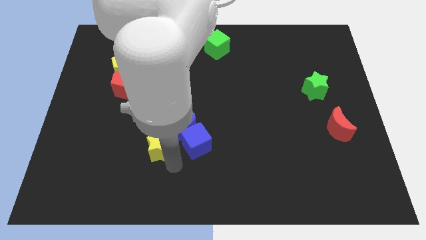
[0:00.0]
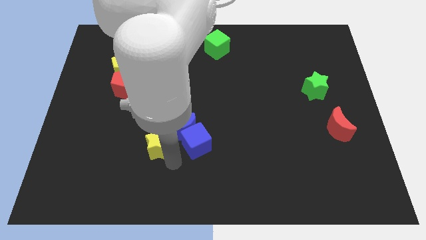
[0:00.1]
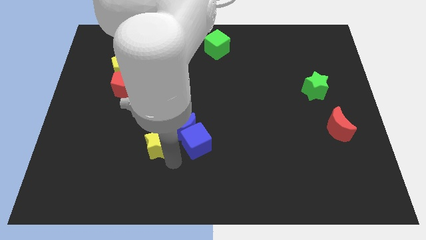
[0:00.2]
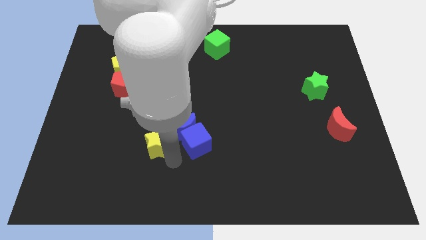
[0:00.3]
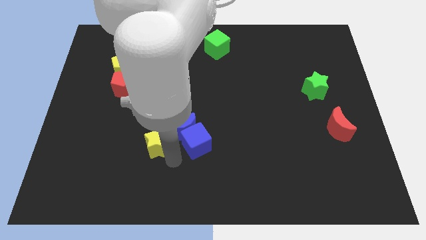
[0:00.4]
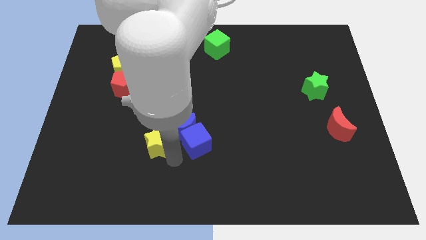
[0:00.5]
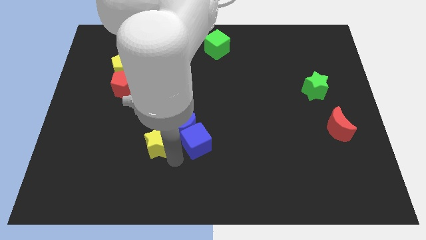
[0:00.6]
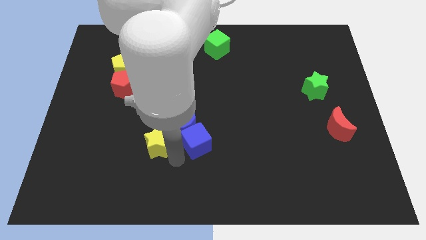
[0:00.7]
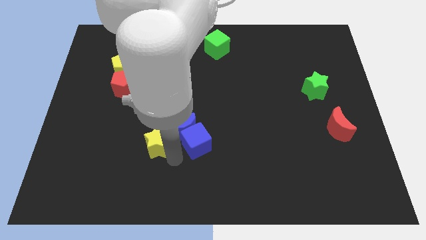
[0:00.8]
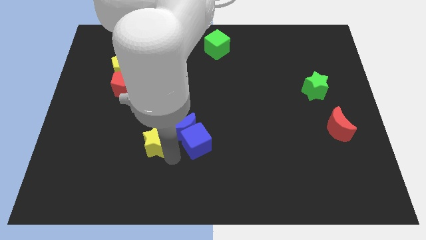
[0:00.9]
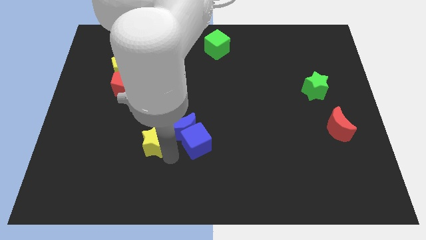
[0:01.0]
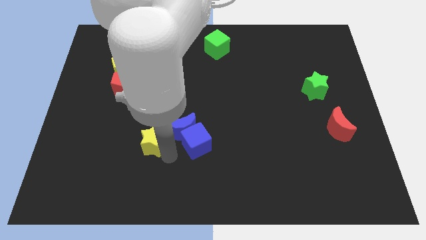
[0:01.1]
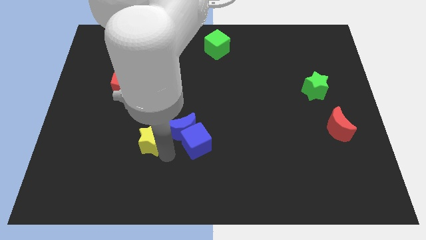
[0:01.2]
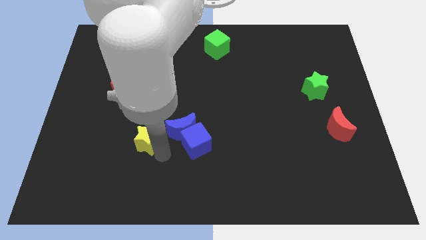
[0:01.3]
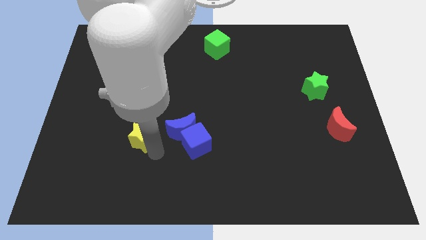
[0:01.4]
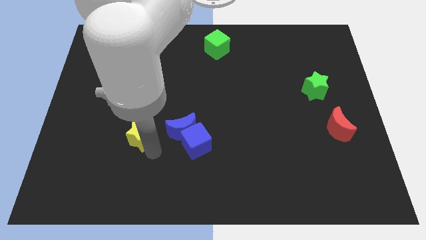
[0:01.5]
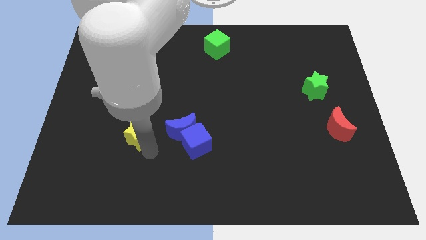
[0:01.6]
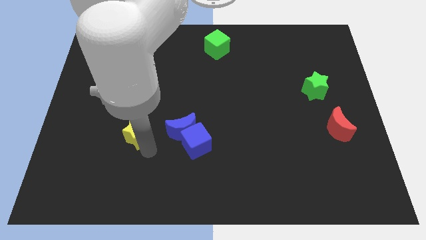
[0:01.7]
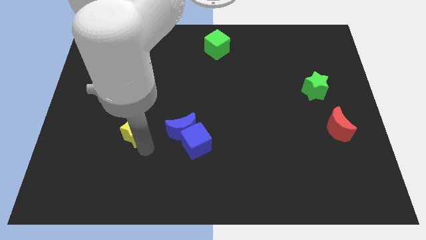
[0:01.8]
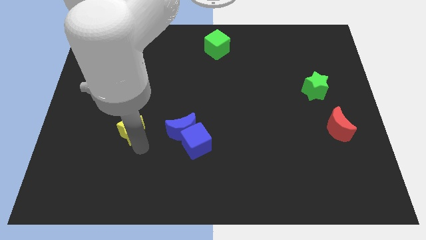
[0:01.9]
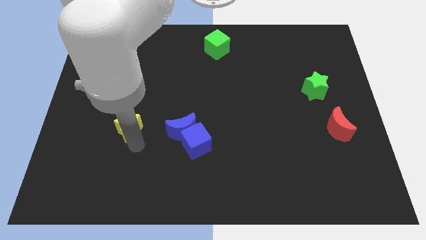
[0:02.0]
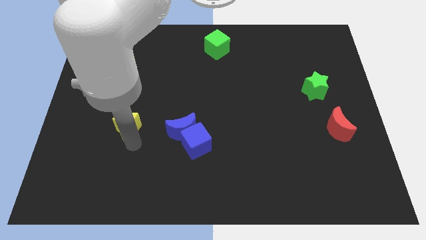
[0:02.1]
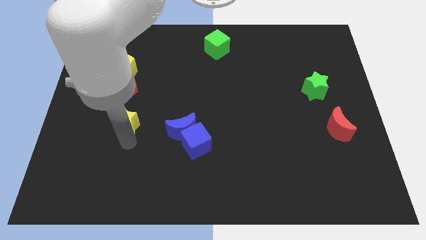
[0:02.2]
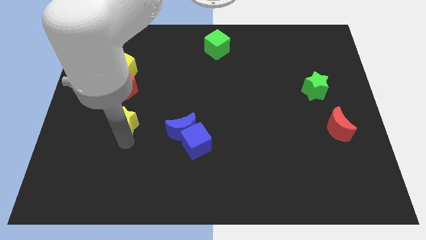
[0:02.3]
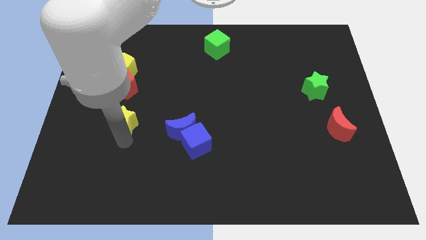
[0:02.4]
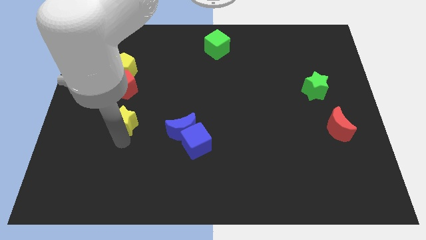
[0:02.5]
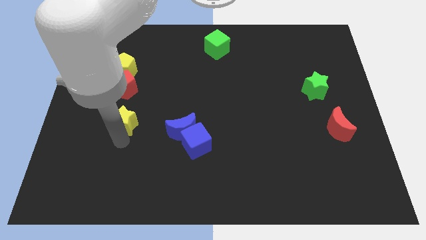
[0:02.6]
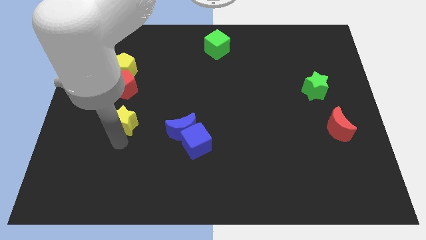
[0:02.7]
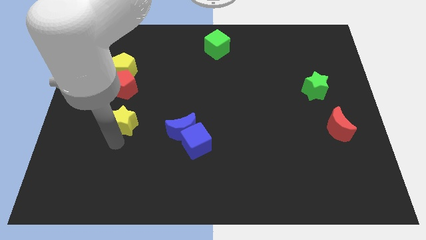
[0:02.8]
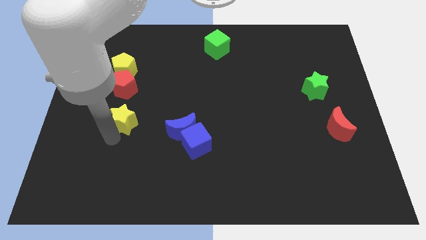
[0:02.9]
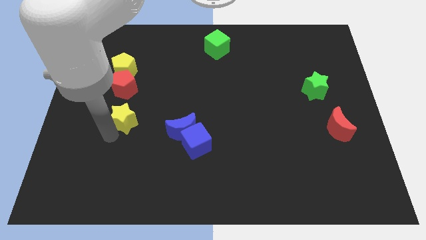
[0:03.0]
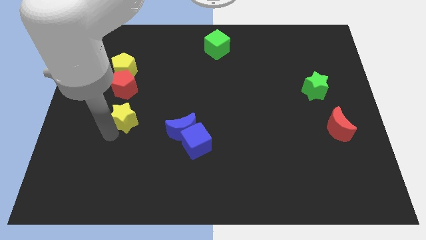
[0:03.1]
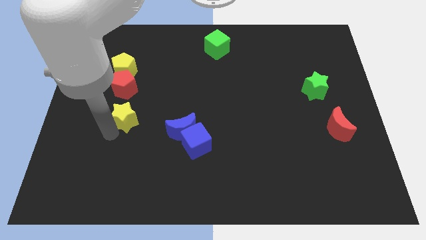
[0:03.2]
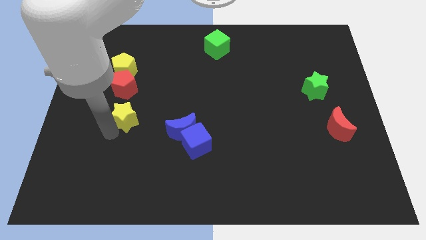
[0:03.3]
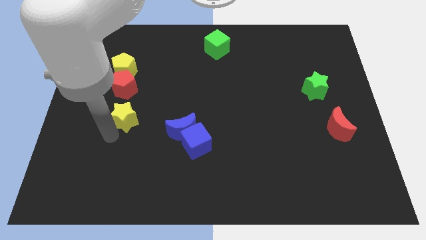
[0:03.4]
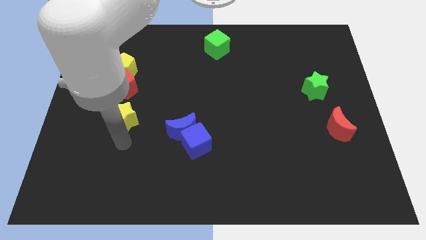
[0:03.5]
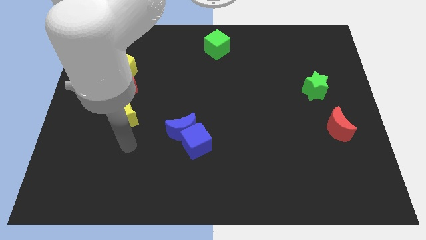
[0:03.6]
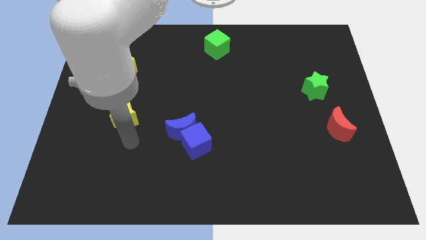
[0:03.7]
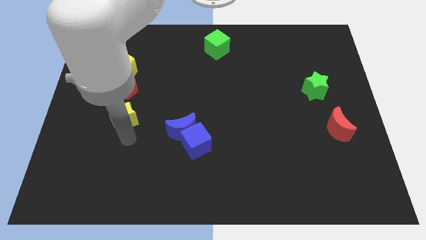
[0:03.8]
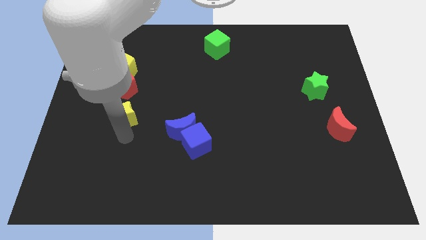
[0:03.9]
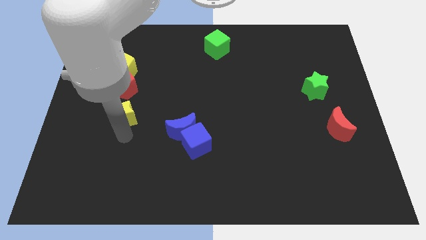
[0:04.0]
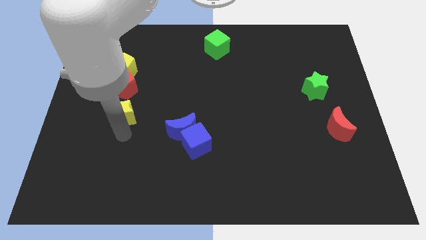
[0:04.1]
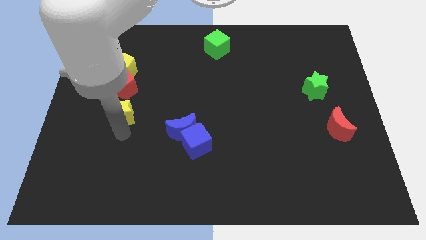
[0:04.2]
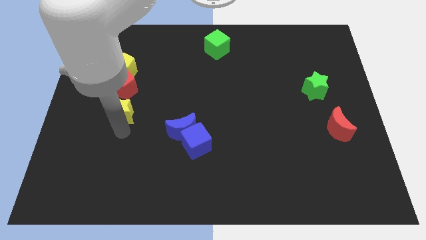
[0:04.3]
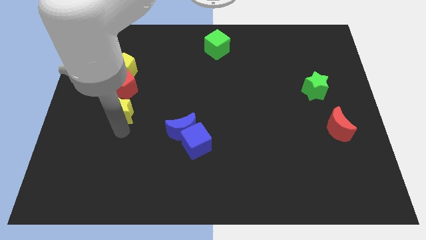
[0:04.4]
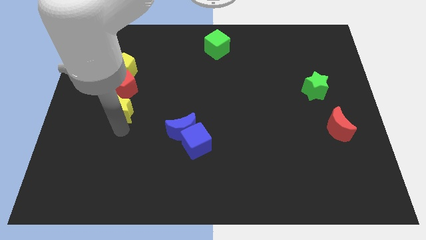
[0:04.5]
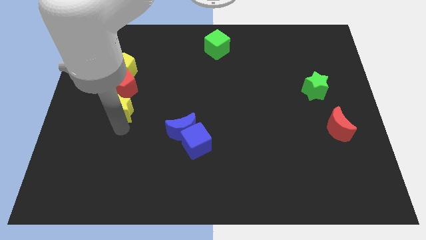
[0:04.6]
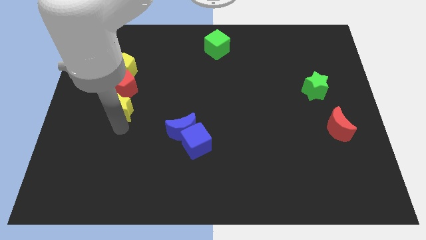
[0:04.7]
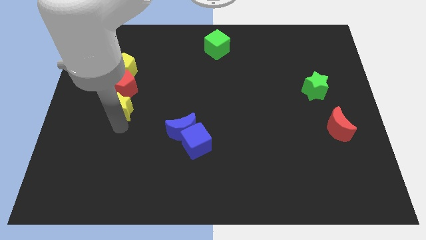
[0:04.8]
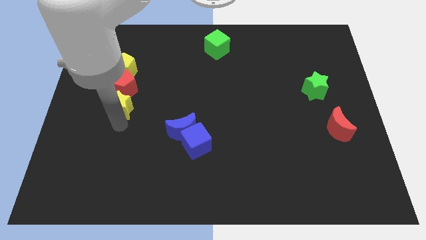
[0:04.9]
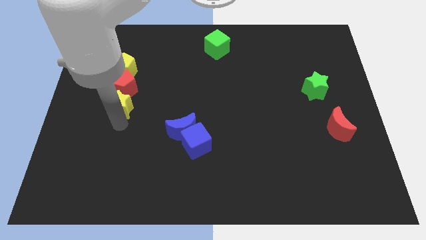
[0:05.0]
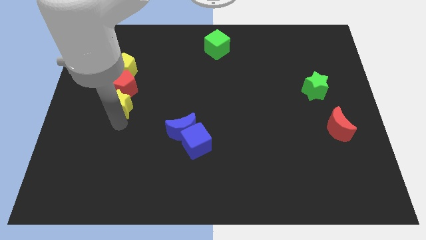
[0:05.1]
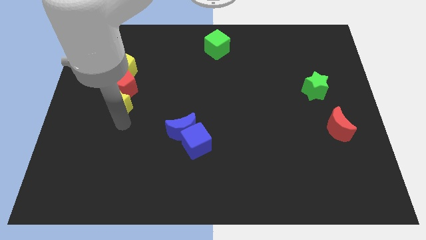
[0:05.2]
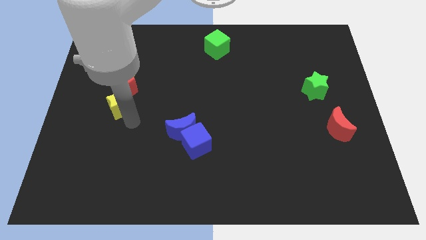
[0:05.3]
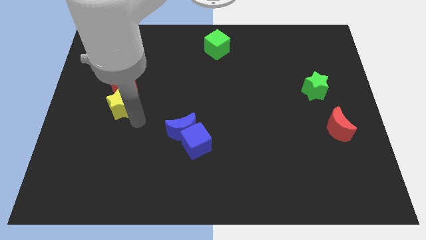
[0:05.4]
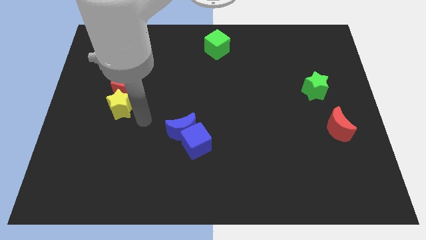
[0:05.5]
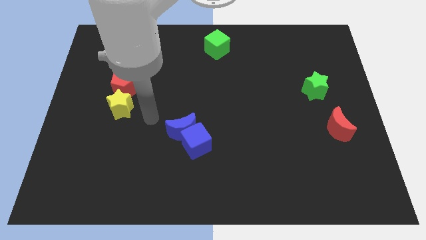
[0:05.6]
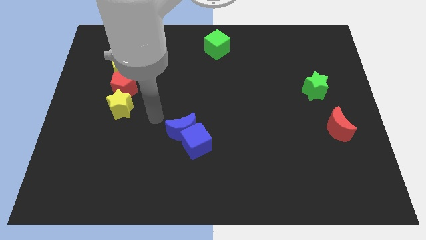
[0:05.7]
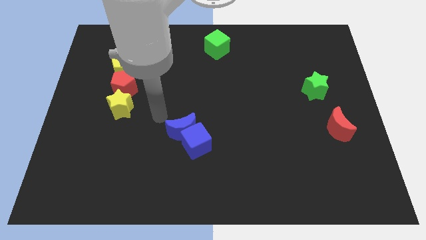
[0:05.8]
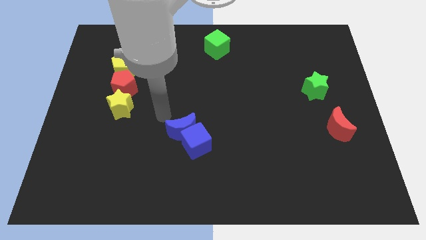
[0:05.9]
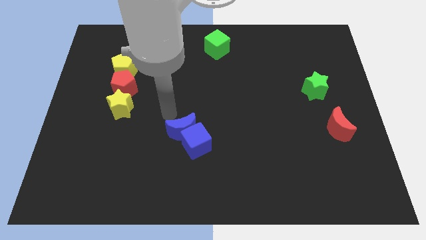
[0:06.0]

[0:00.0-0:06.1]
put yellow star below red pentagon

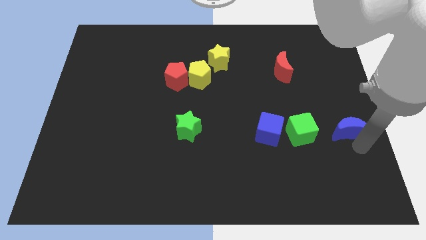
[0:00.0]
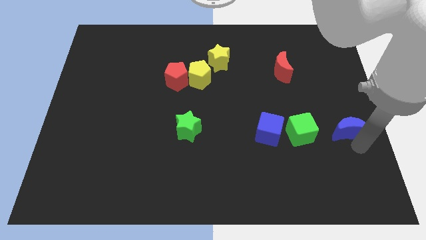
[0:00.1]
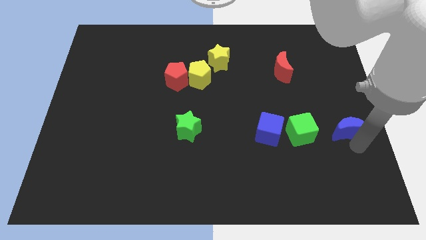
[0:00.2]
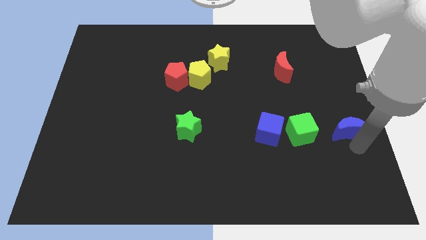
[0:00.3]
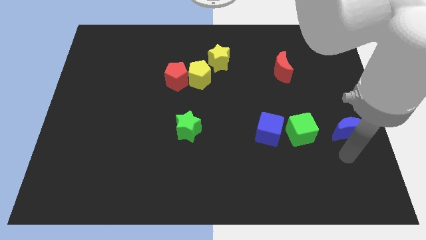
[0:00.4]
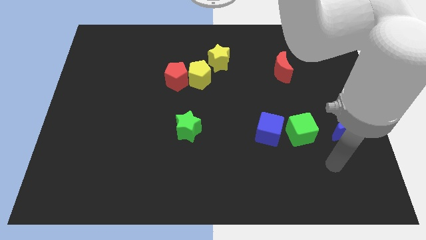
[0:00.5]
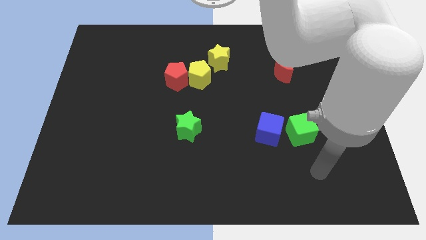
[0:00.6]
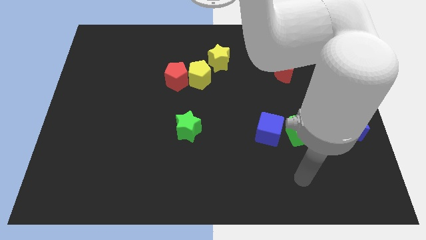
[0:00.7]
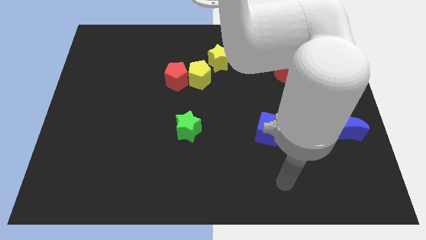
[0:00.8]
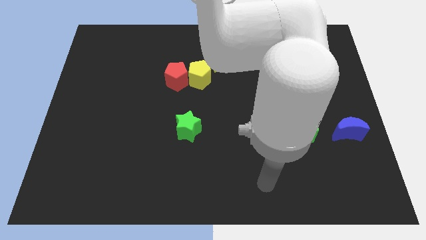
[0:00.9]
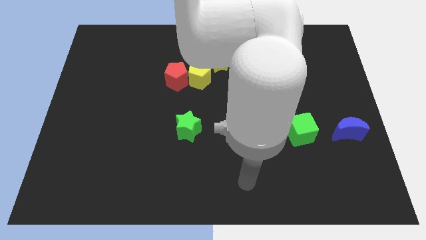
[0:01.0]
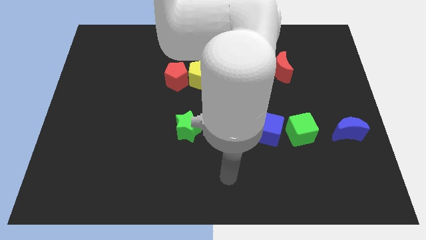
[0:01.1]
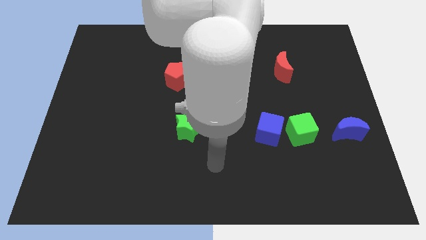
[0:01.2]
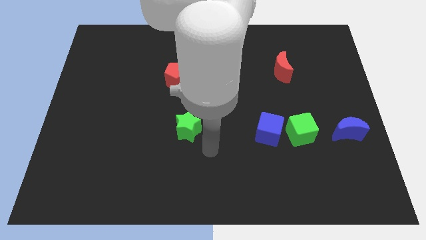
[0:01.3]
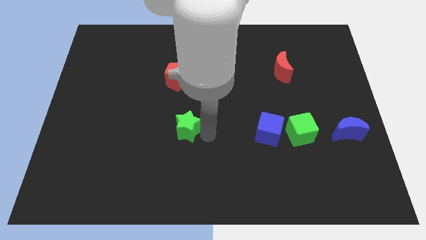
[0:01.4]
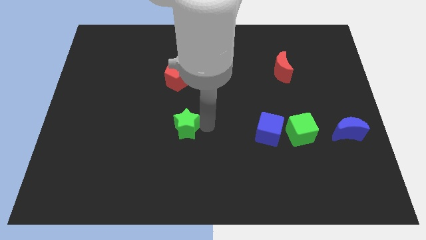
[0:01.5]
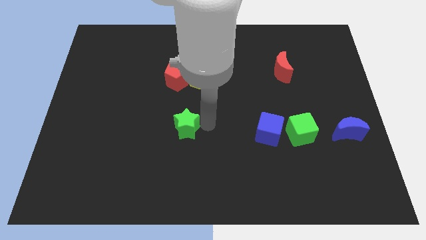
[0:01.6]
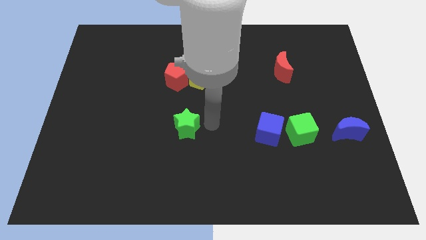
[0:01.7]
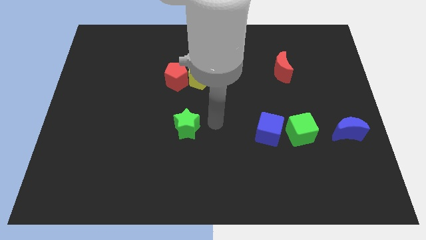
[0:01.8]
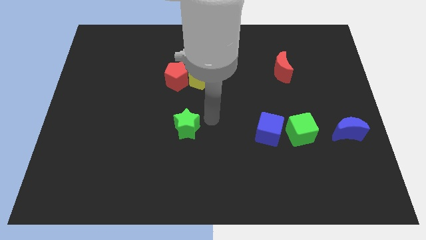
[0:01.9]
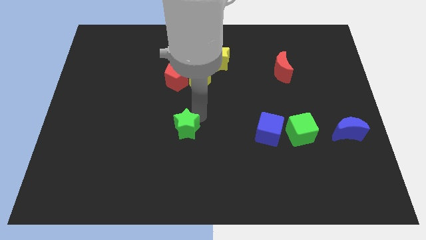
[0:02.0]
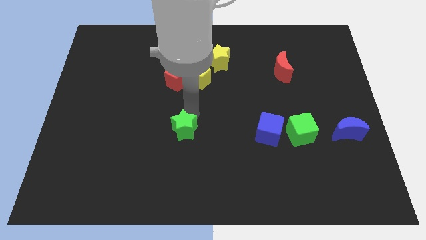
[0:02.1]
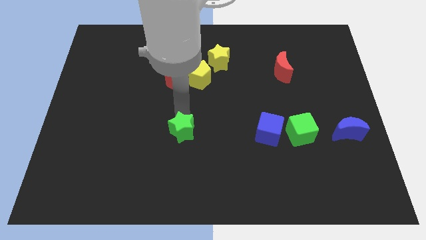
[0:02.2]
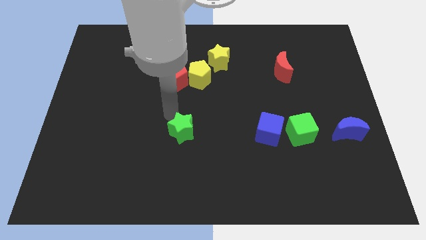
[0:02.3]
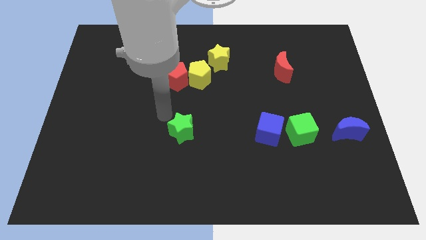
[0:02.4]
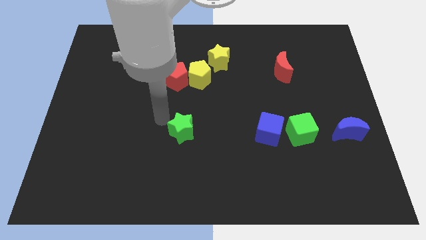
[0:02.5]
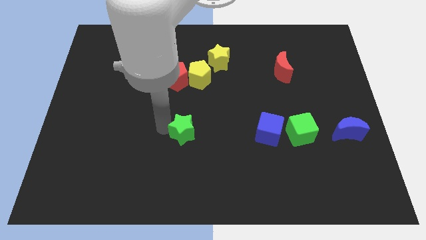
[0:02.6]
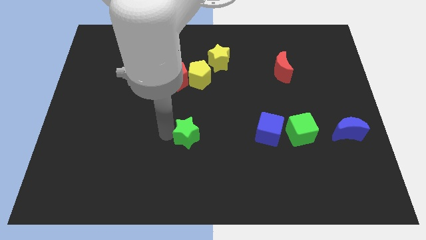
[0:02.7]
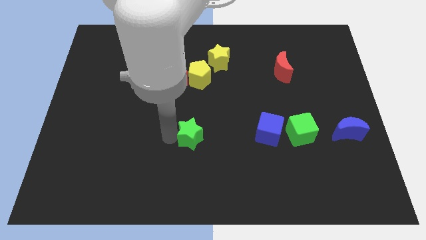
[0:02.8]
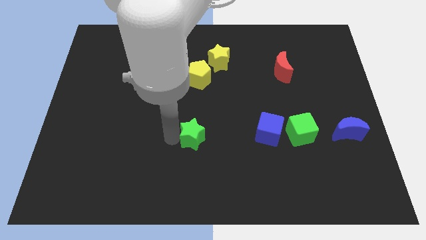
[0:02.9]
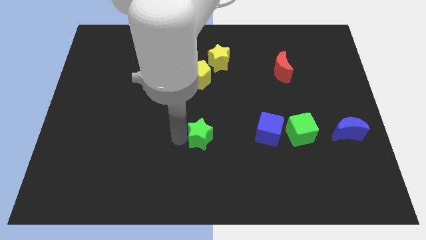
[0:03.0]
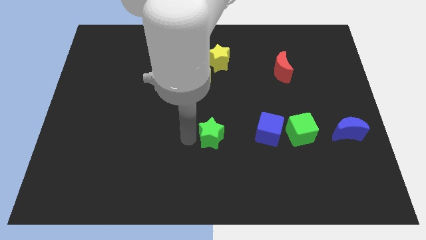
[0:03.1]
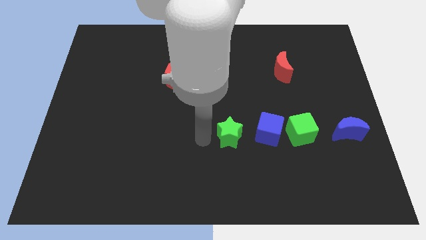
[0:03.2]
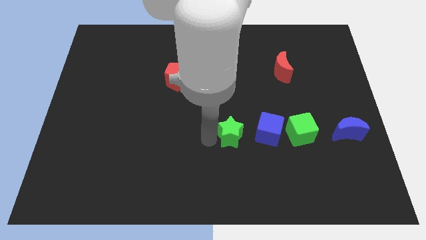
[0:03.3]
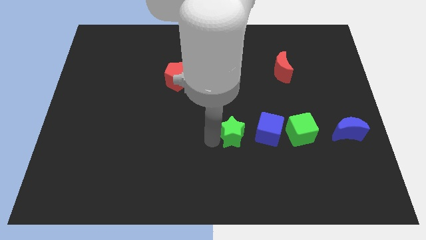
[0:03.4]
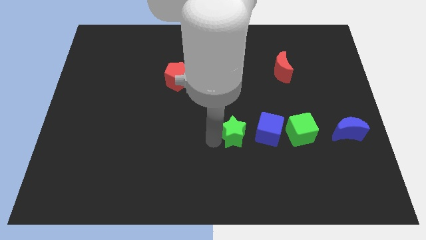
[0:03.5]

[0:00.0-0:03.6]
move the green star to the left of the blue cube
